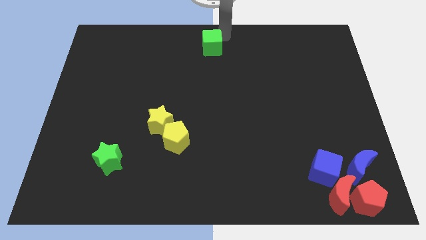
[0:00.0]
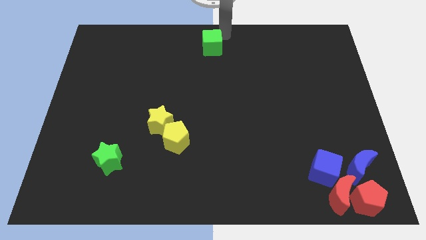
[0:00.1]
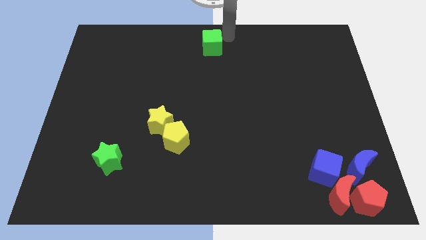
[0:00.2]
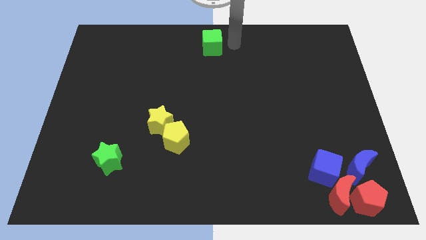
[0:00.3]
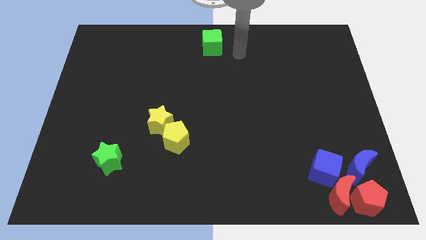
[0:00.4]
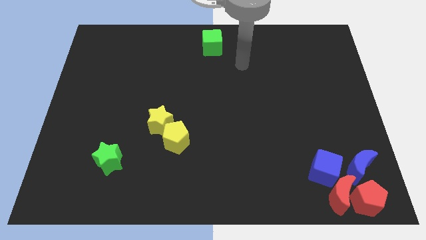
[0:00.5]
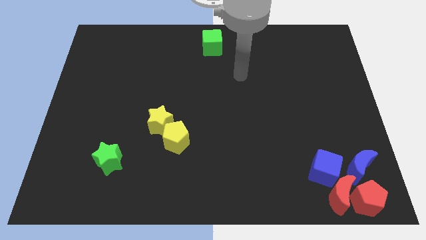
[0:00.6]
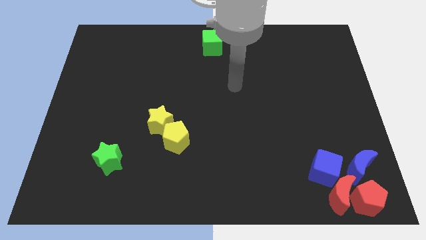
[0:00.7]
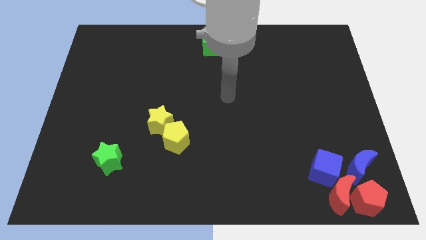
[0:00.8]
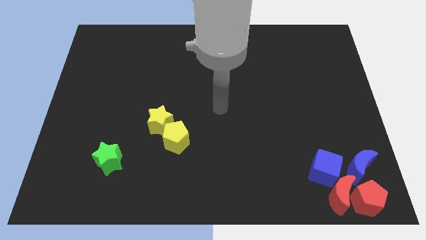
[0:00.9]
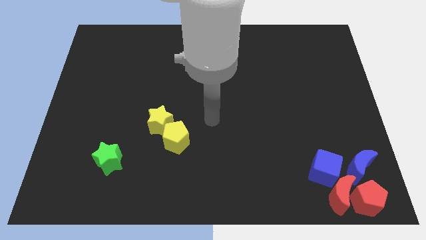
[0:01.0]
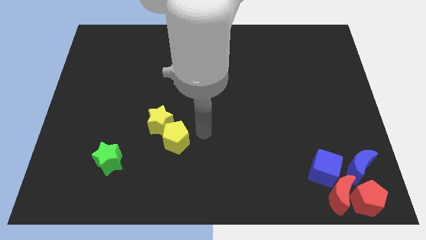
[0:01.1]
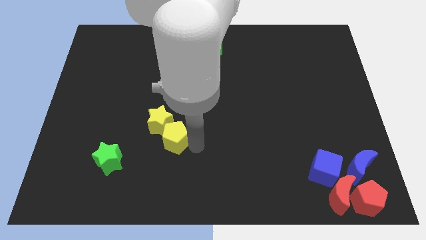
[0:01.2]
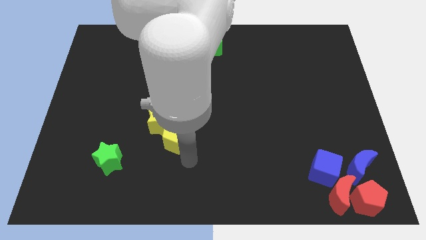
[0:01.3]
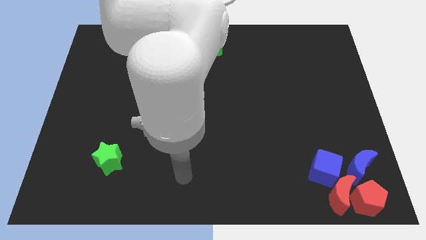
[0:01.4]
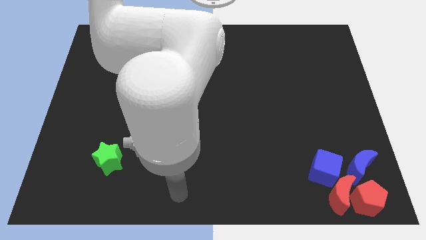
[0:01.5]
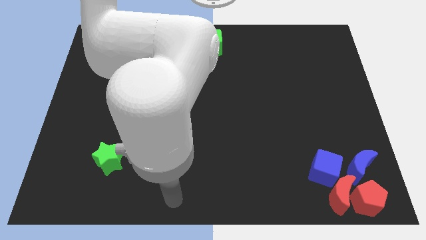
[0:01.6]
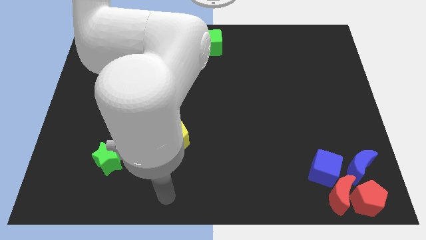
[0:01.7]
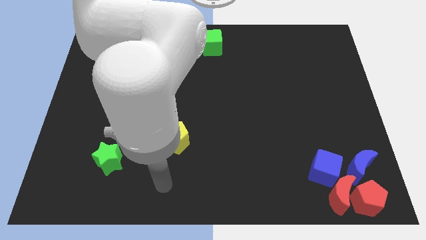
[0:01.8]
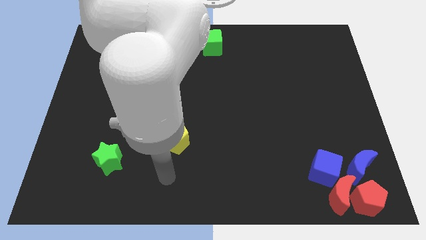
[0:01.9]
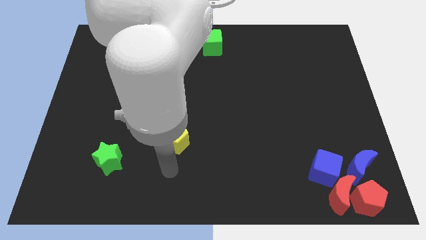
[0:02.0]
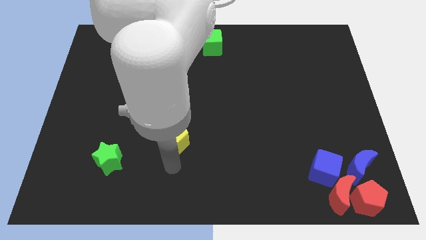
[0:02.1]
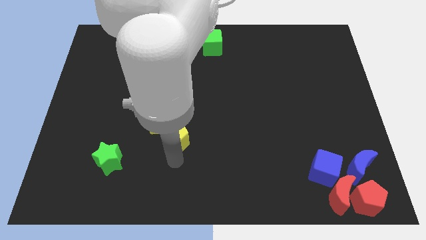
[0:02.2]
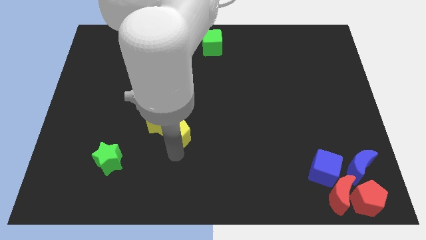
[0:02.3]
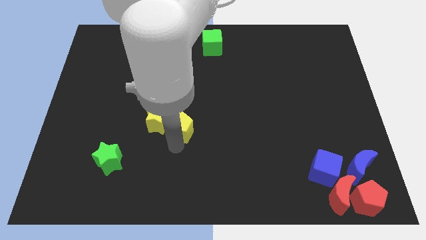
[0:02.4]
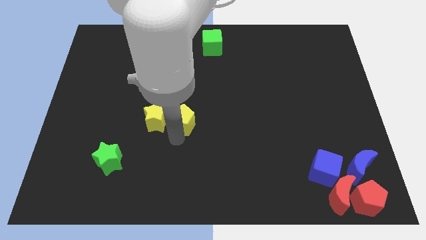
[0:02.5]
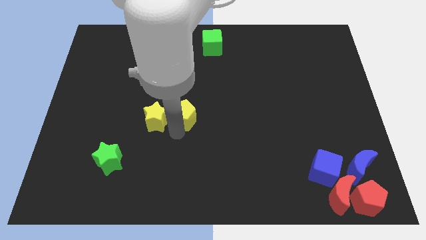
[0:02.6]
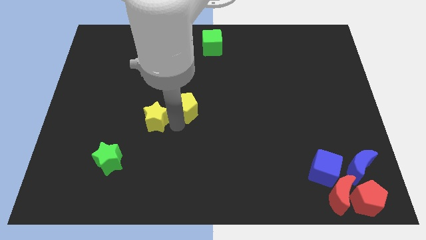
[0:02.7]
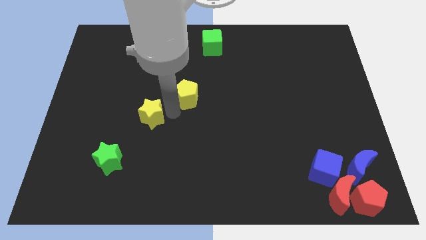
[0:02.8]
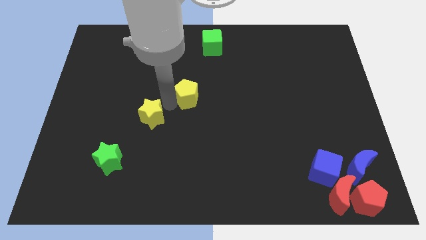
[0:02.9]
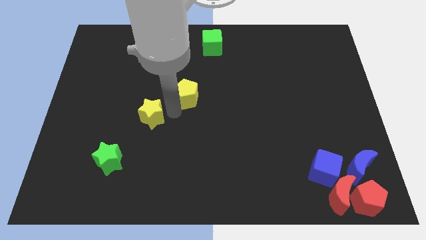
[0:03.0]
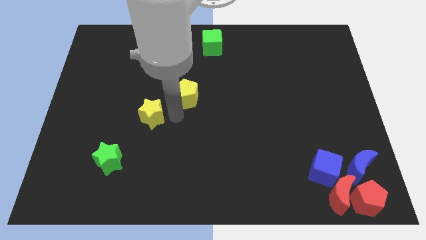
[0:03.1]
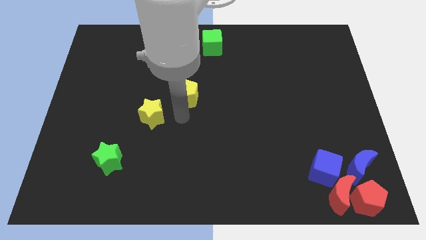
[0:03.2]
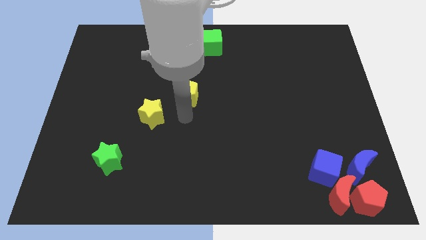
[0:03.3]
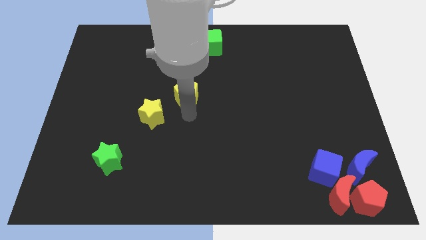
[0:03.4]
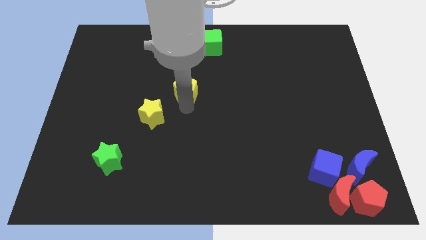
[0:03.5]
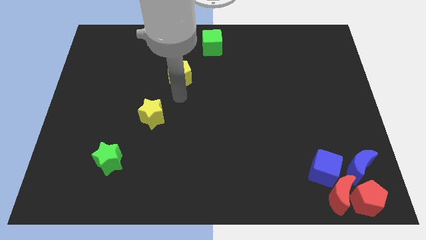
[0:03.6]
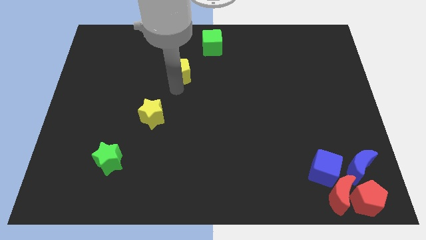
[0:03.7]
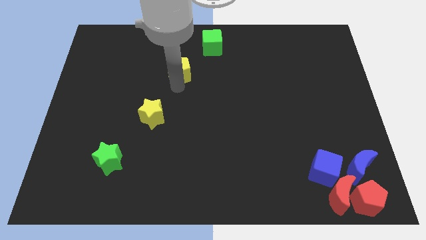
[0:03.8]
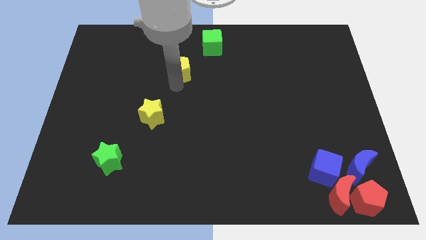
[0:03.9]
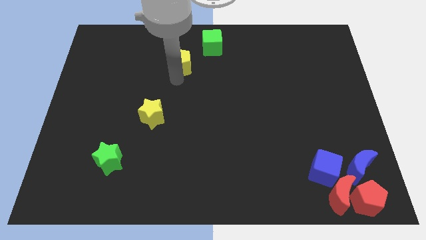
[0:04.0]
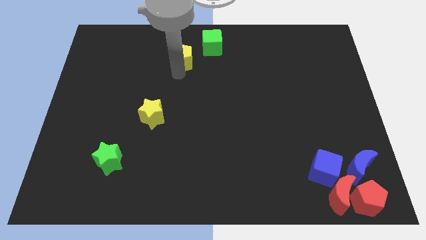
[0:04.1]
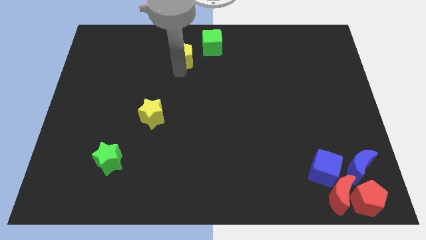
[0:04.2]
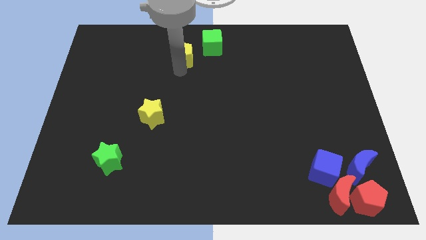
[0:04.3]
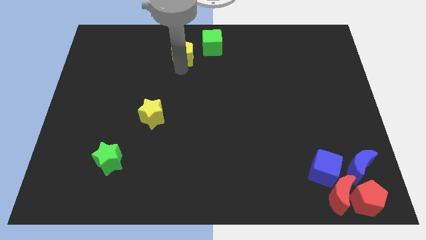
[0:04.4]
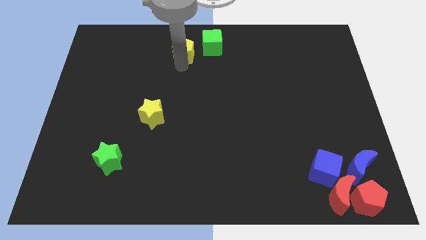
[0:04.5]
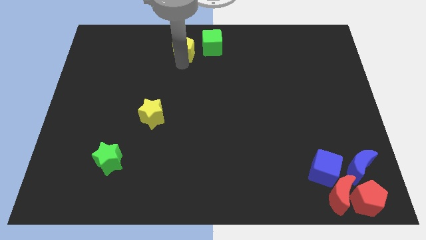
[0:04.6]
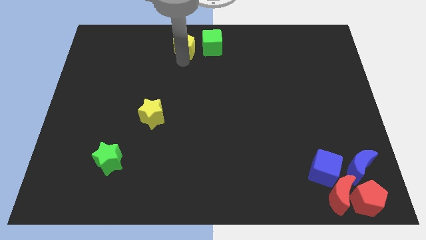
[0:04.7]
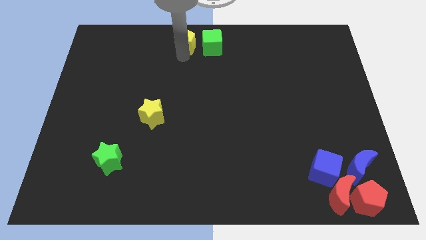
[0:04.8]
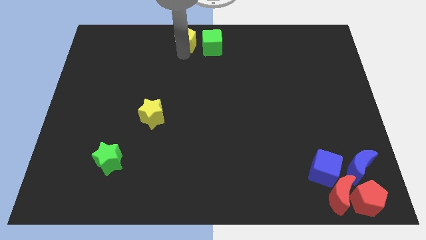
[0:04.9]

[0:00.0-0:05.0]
arrange the yellow pentagon on the left side of the green cube

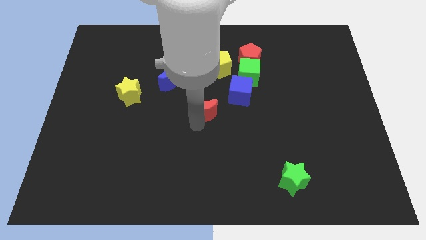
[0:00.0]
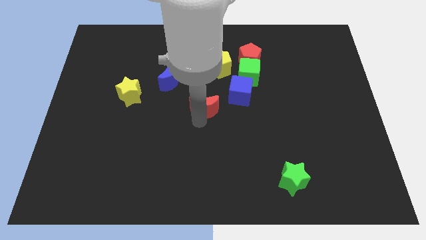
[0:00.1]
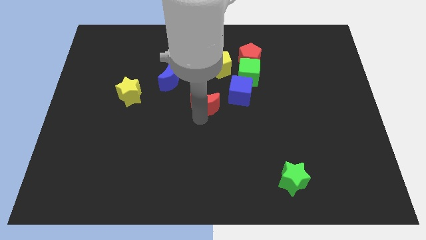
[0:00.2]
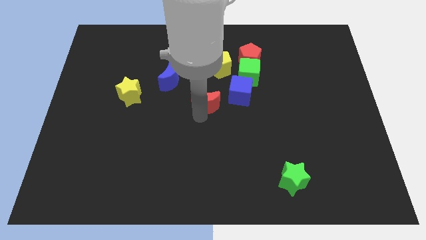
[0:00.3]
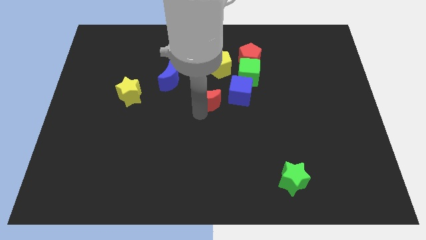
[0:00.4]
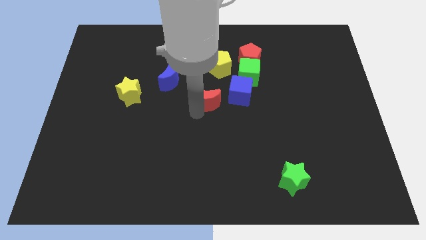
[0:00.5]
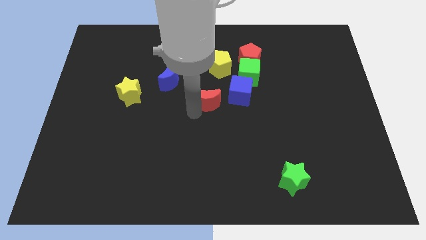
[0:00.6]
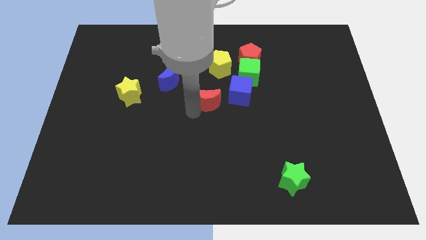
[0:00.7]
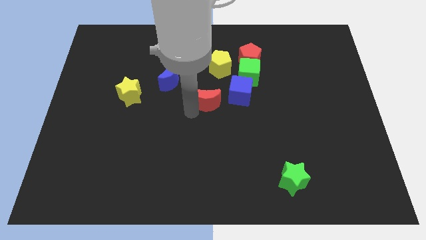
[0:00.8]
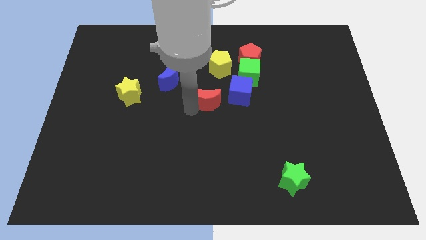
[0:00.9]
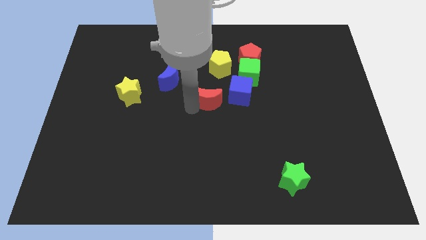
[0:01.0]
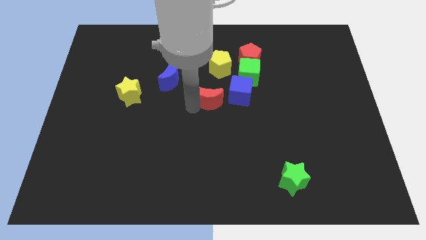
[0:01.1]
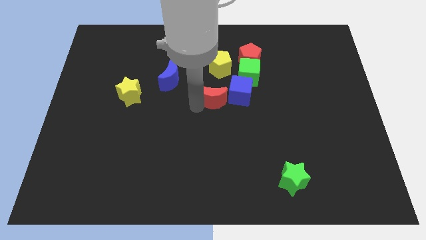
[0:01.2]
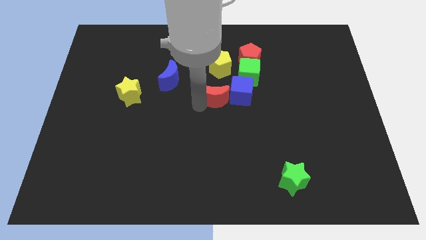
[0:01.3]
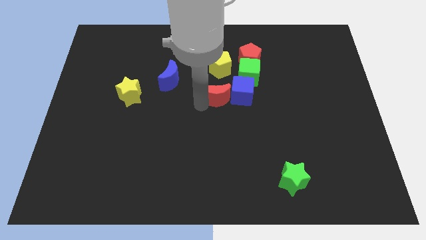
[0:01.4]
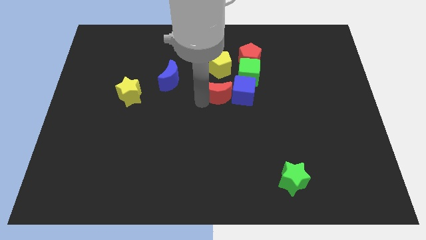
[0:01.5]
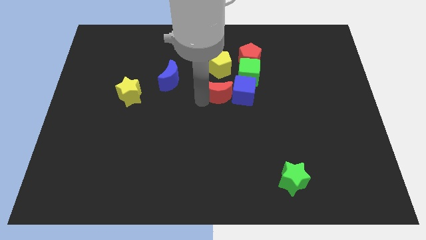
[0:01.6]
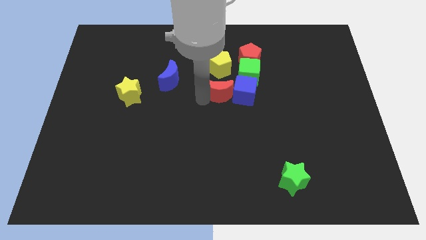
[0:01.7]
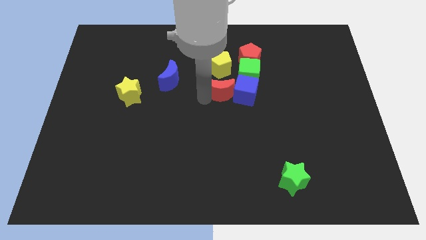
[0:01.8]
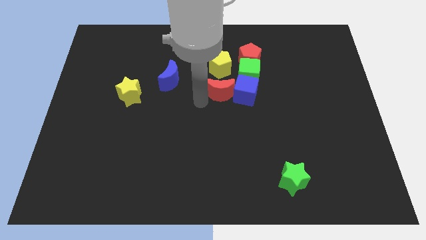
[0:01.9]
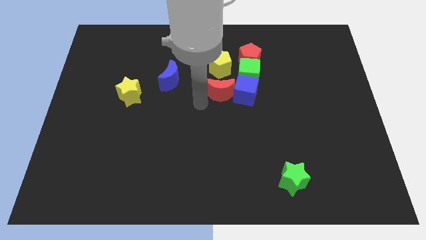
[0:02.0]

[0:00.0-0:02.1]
attach the red moon to the blue cube

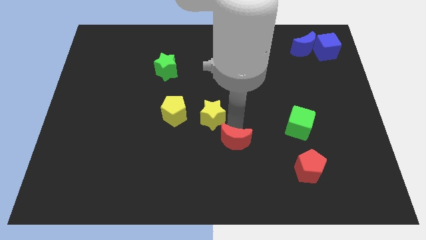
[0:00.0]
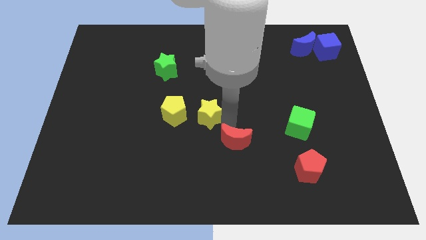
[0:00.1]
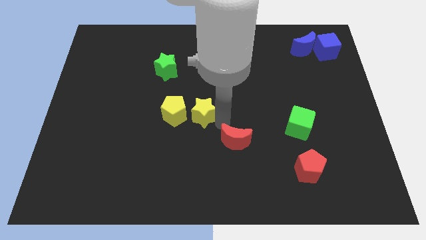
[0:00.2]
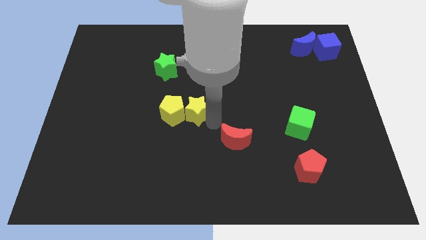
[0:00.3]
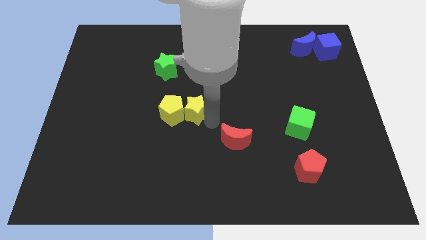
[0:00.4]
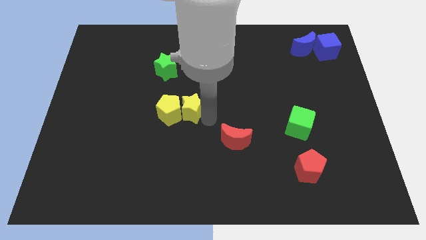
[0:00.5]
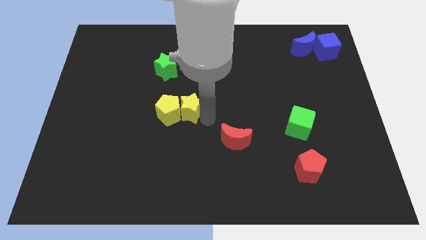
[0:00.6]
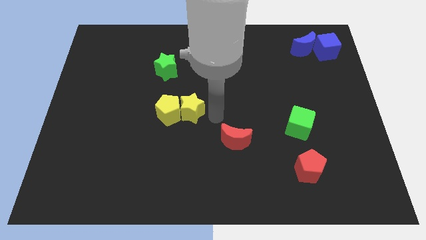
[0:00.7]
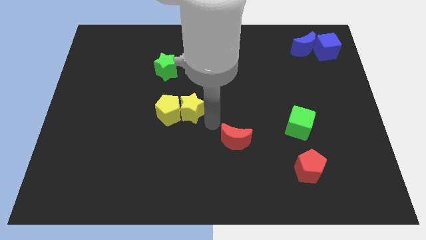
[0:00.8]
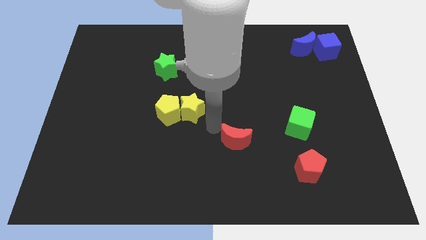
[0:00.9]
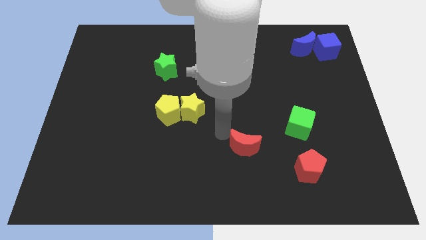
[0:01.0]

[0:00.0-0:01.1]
push yellow star into yellow pentagon

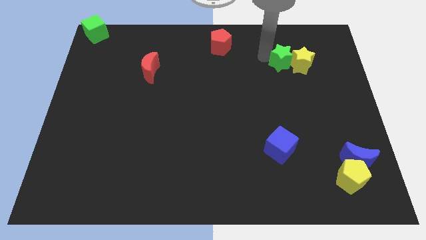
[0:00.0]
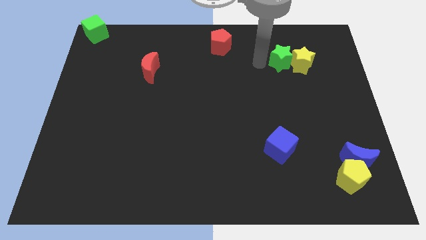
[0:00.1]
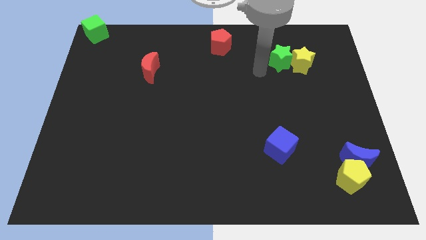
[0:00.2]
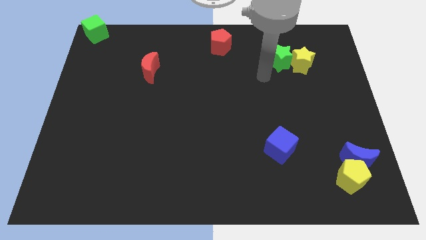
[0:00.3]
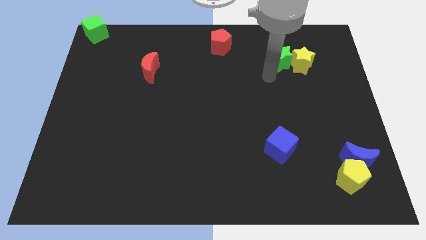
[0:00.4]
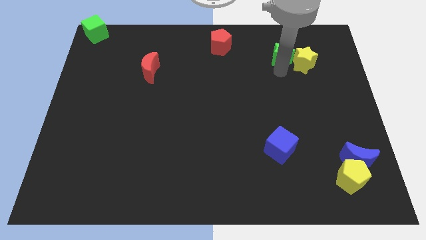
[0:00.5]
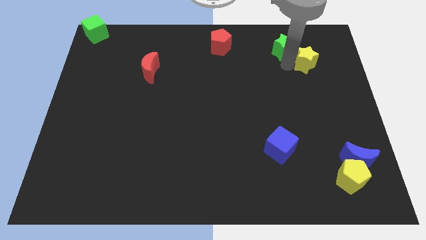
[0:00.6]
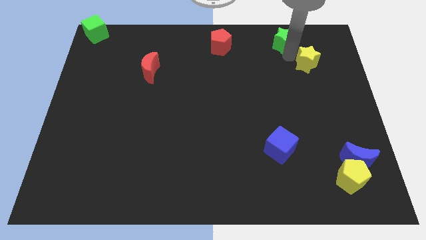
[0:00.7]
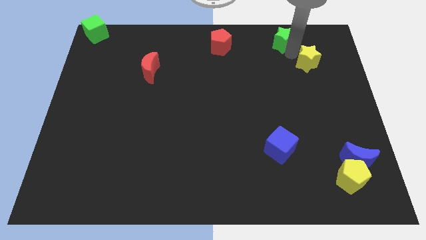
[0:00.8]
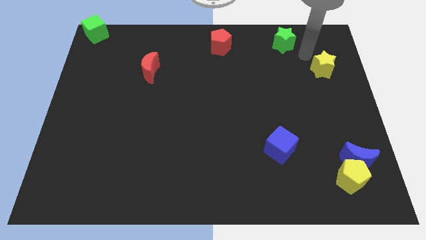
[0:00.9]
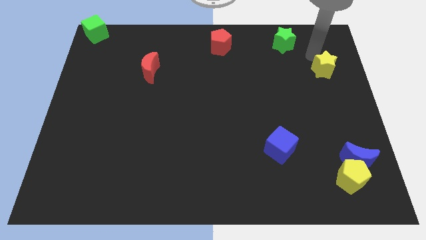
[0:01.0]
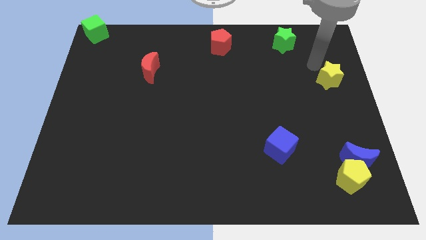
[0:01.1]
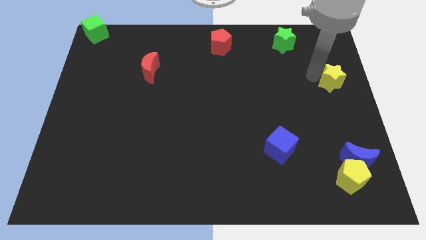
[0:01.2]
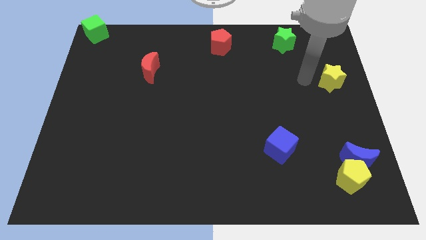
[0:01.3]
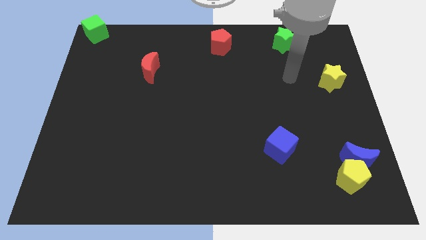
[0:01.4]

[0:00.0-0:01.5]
separate the yellow star and green star
